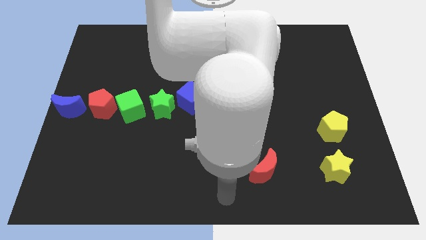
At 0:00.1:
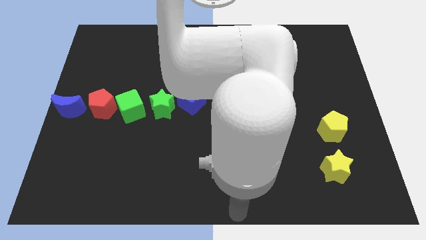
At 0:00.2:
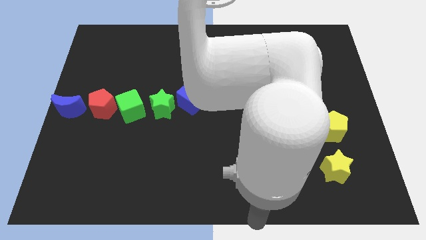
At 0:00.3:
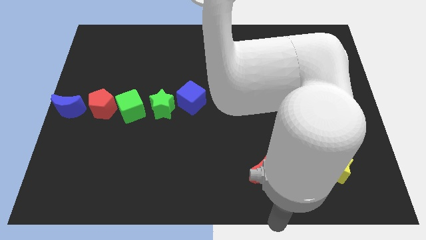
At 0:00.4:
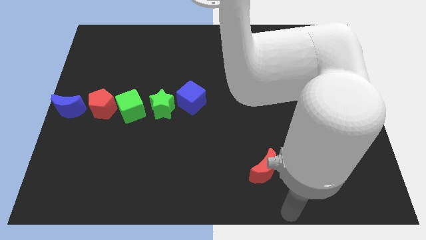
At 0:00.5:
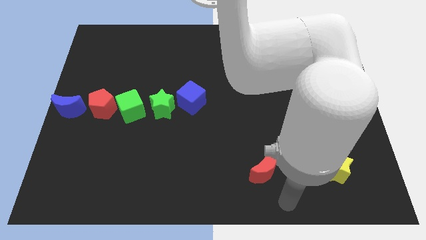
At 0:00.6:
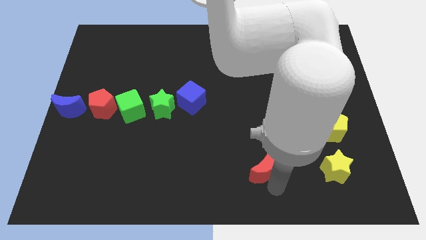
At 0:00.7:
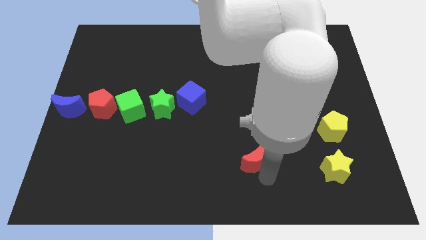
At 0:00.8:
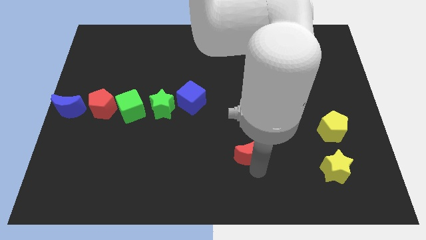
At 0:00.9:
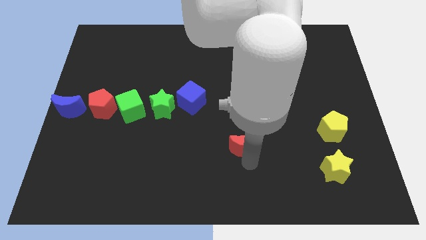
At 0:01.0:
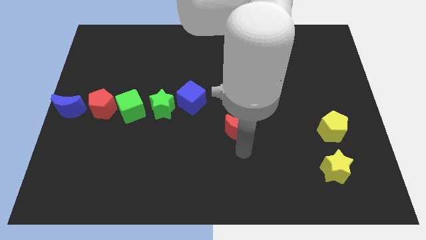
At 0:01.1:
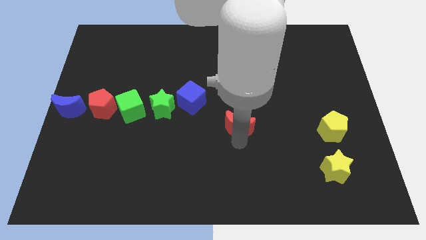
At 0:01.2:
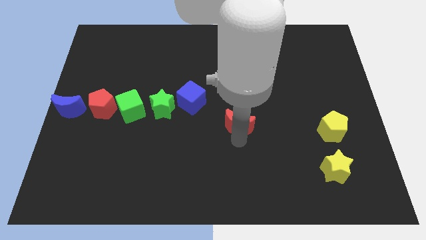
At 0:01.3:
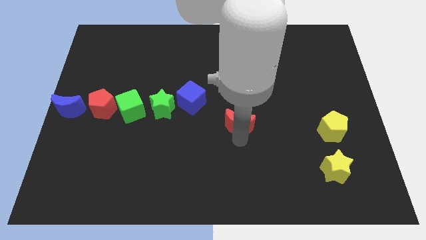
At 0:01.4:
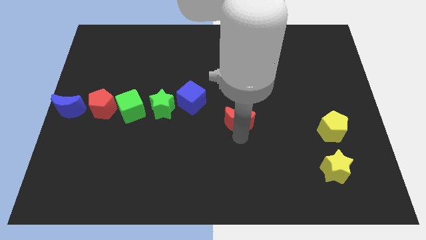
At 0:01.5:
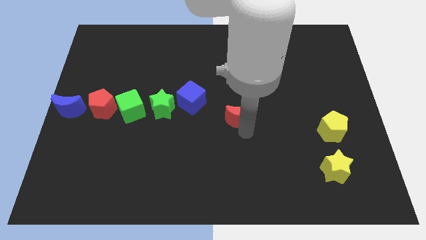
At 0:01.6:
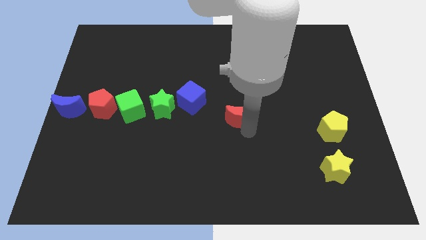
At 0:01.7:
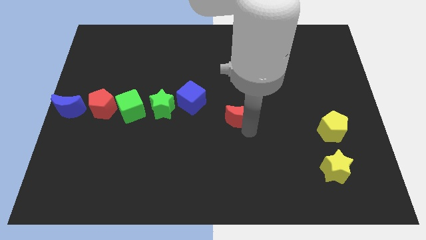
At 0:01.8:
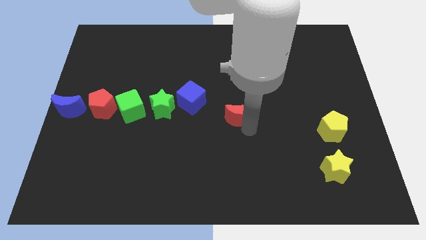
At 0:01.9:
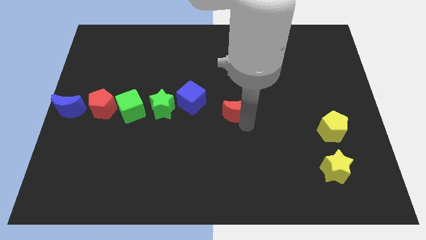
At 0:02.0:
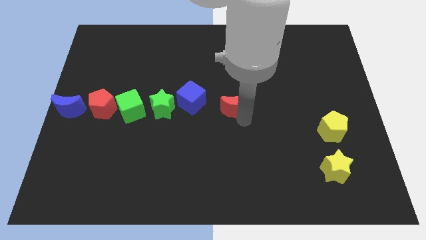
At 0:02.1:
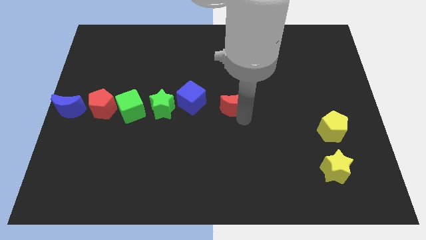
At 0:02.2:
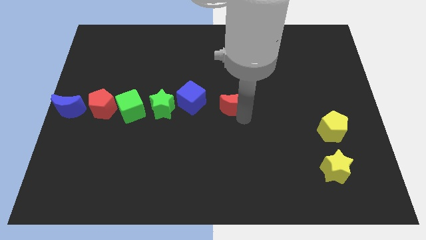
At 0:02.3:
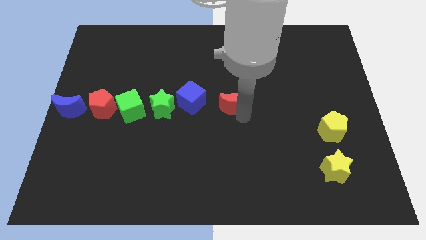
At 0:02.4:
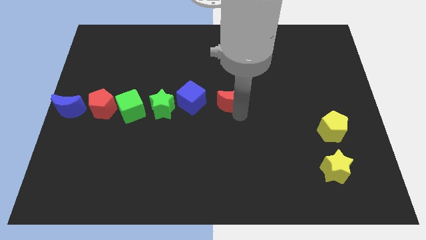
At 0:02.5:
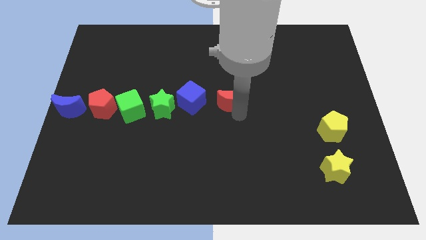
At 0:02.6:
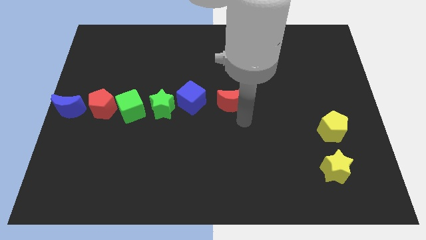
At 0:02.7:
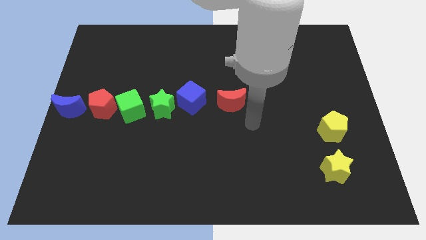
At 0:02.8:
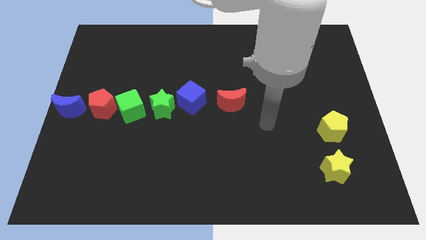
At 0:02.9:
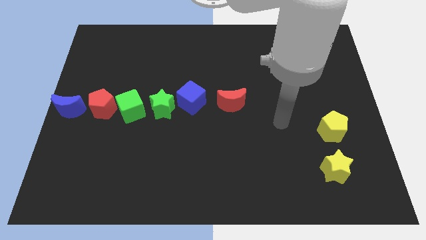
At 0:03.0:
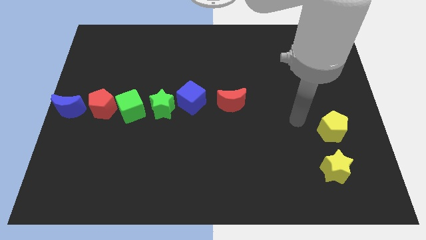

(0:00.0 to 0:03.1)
push the red moon at the center of the board

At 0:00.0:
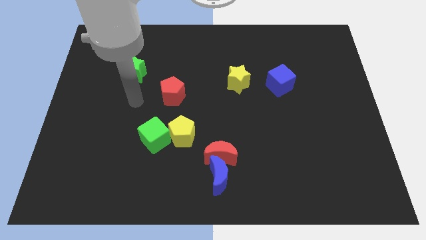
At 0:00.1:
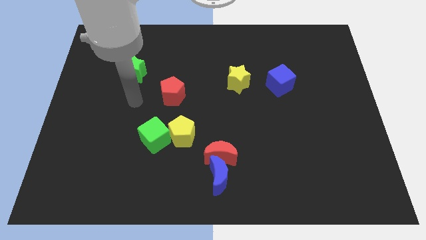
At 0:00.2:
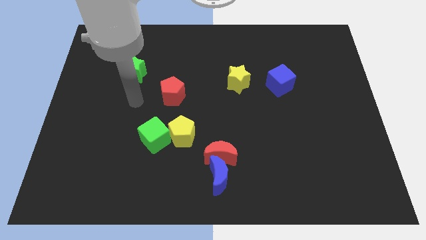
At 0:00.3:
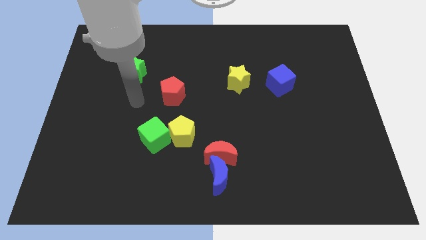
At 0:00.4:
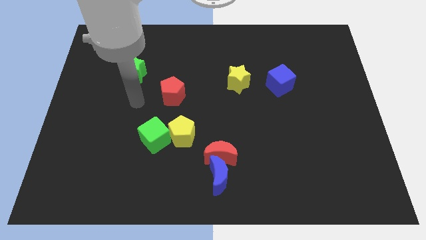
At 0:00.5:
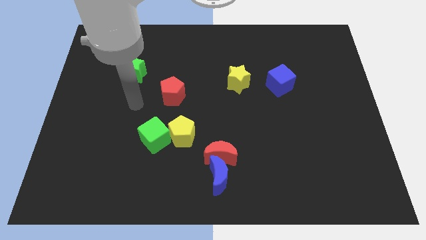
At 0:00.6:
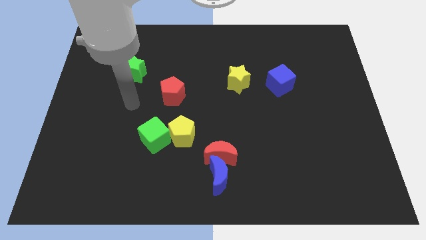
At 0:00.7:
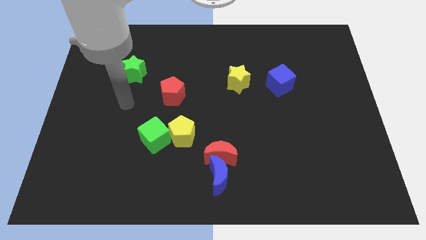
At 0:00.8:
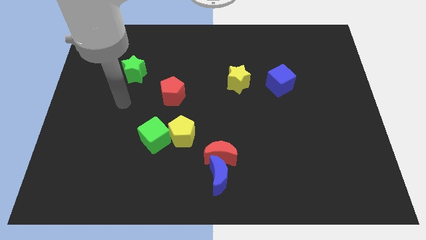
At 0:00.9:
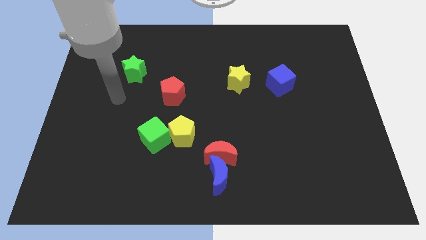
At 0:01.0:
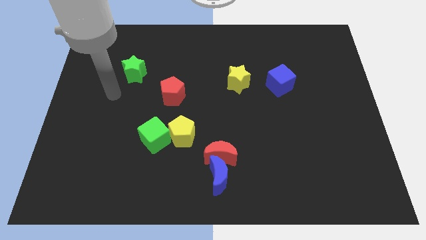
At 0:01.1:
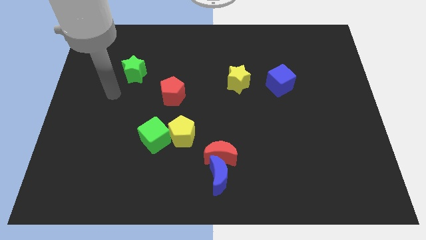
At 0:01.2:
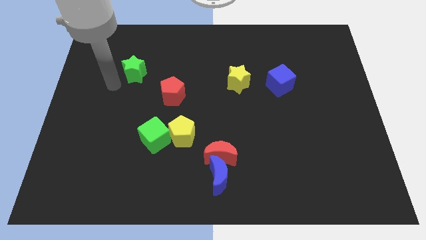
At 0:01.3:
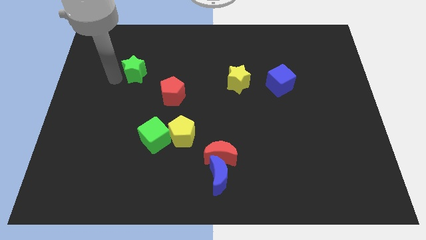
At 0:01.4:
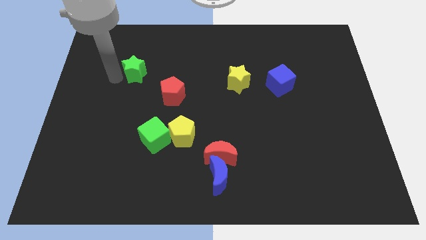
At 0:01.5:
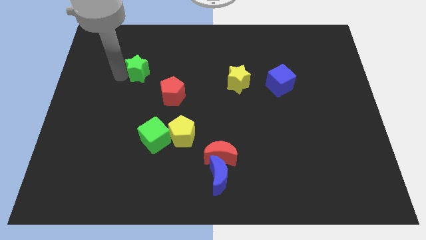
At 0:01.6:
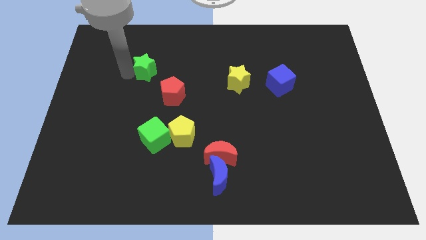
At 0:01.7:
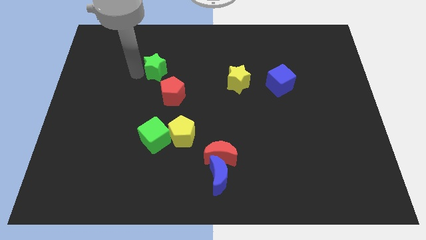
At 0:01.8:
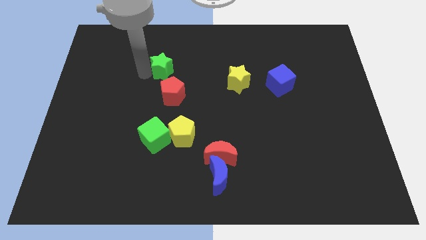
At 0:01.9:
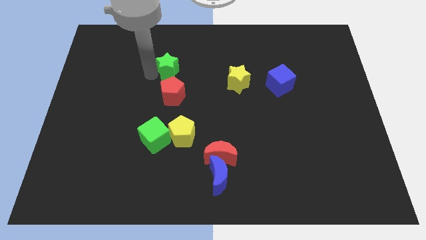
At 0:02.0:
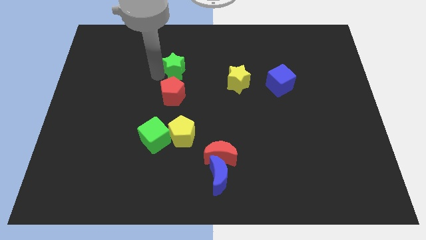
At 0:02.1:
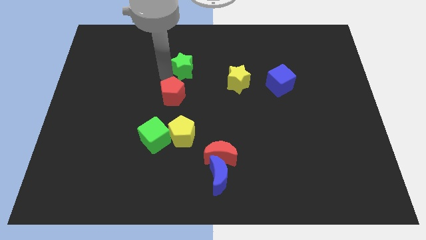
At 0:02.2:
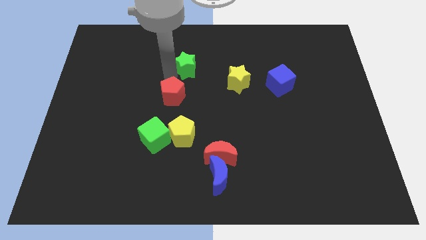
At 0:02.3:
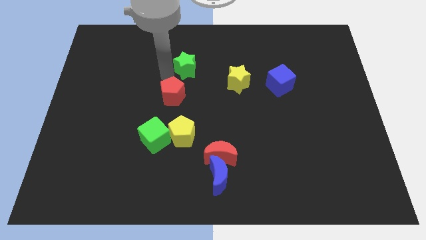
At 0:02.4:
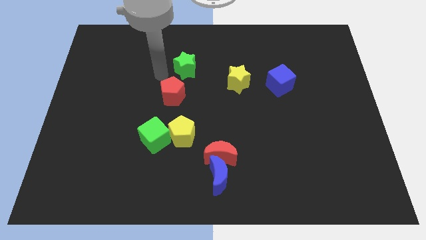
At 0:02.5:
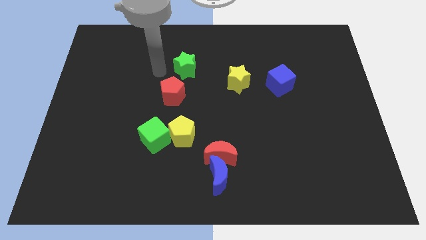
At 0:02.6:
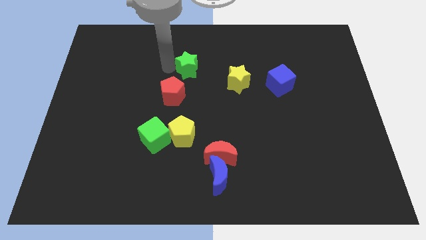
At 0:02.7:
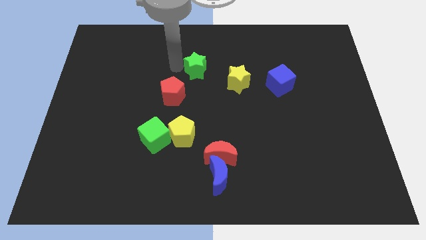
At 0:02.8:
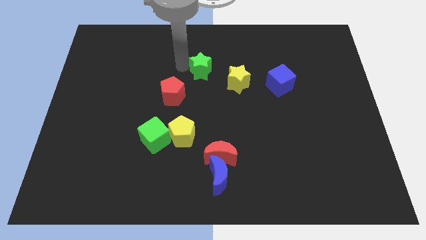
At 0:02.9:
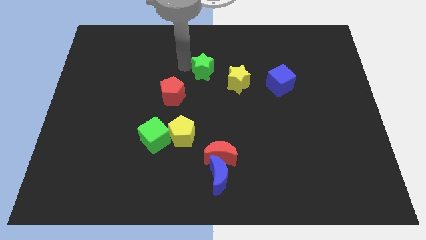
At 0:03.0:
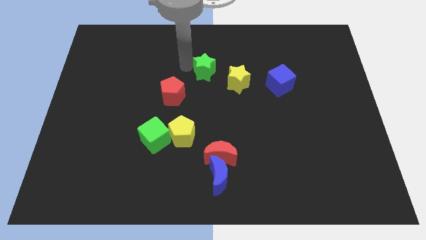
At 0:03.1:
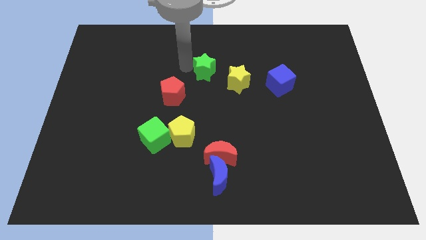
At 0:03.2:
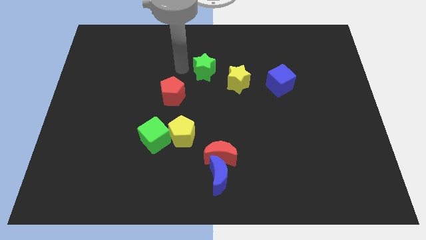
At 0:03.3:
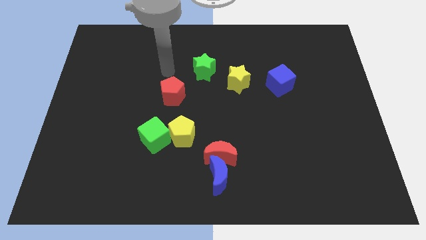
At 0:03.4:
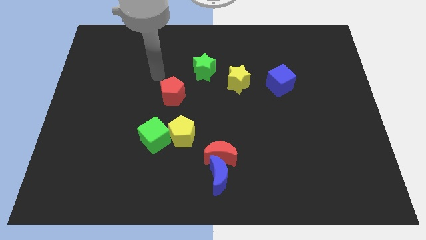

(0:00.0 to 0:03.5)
move the green star diagonal to top right to the red pentagon

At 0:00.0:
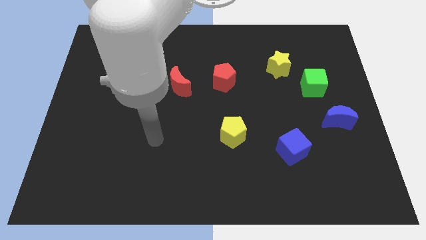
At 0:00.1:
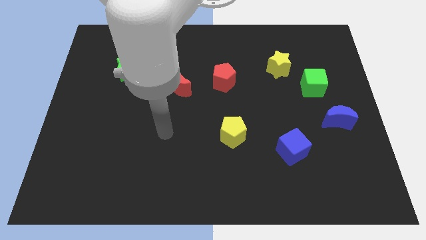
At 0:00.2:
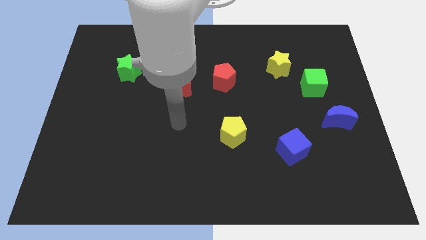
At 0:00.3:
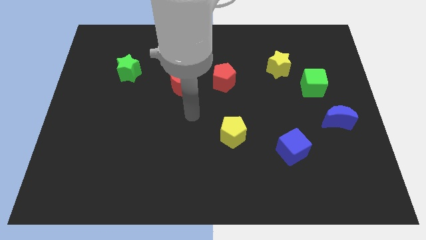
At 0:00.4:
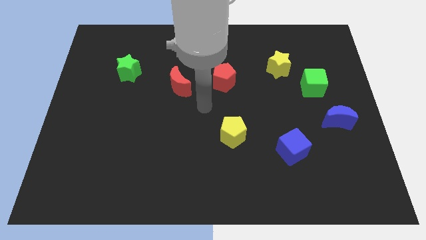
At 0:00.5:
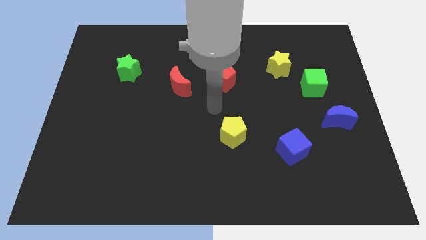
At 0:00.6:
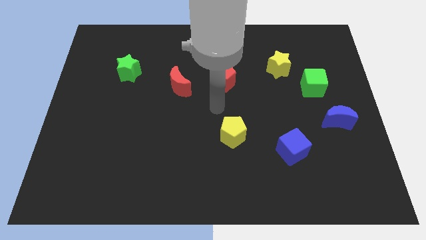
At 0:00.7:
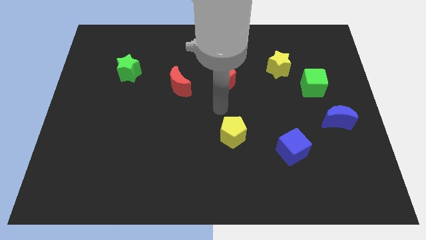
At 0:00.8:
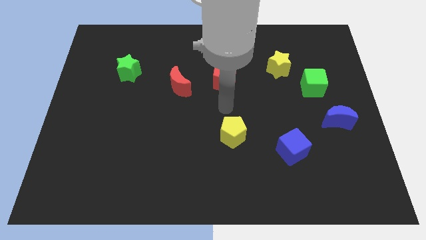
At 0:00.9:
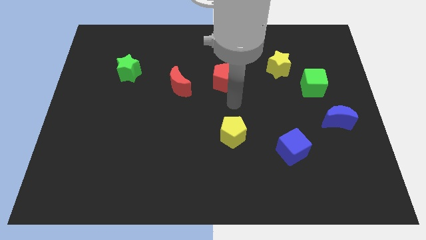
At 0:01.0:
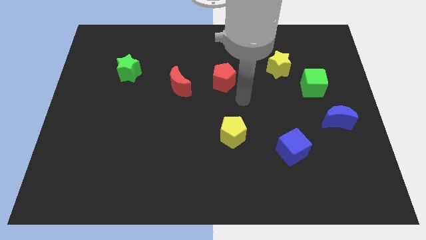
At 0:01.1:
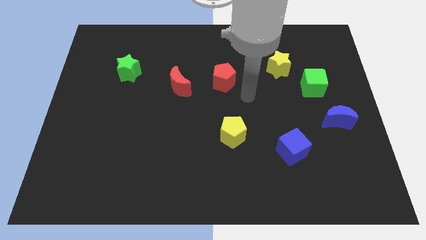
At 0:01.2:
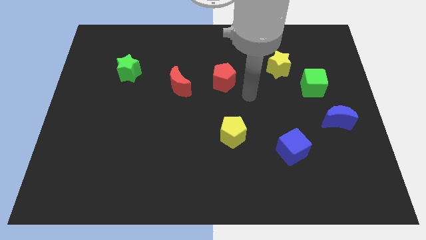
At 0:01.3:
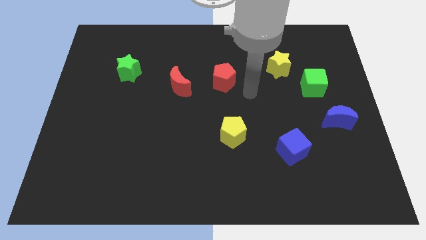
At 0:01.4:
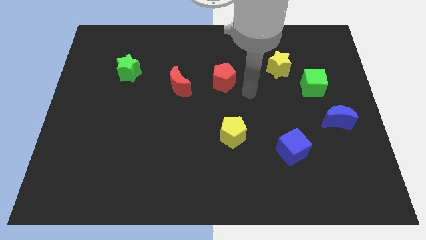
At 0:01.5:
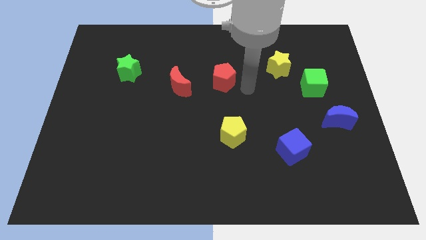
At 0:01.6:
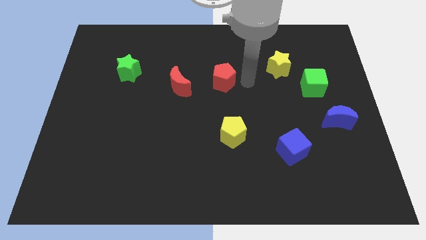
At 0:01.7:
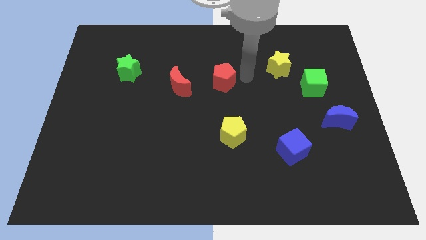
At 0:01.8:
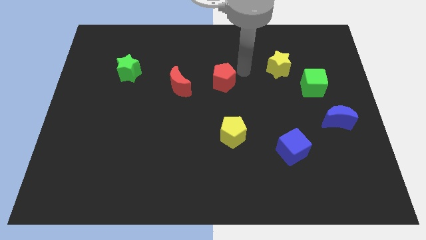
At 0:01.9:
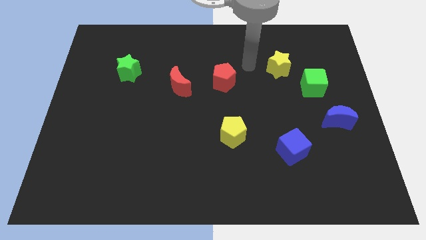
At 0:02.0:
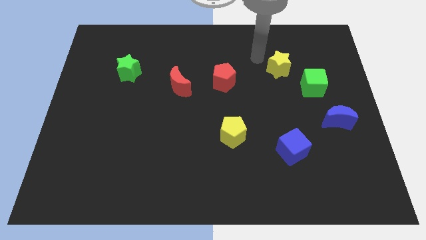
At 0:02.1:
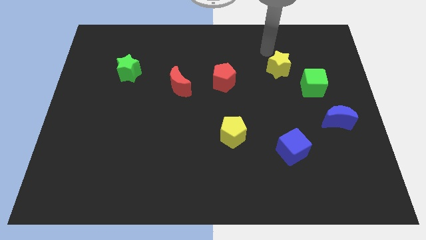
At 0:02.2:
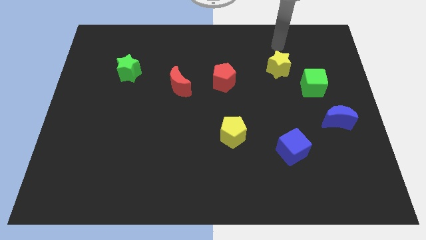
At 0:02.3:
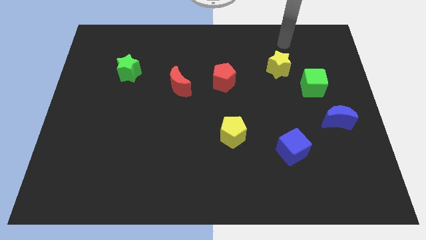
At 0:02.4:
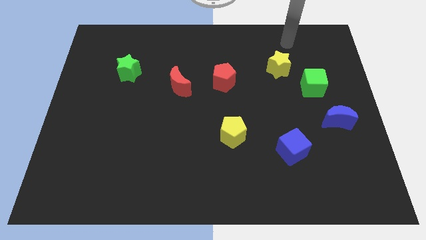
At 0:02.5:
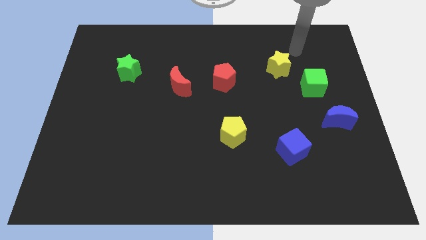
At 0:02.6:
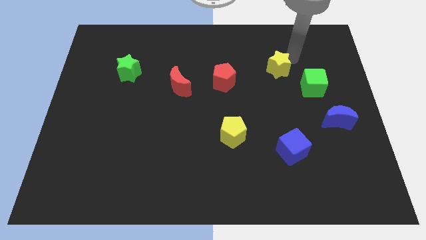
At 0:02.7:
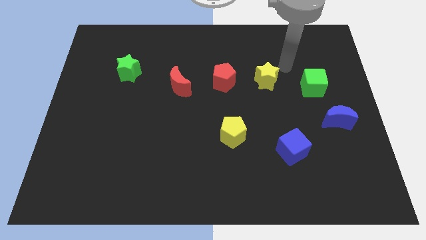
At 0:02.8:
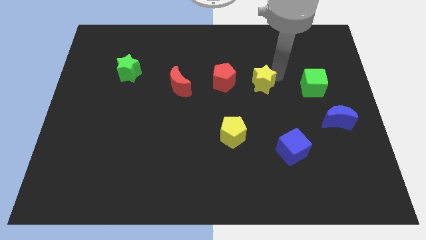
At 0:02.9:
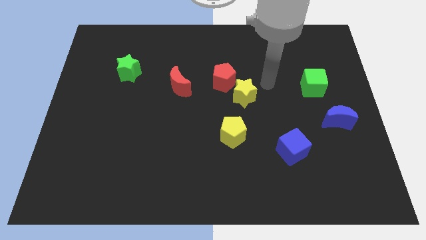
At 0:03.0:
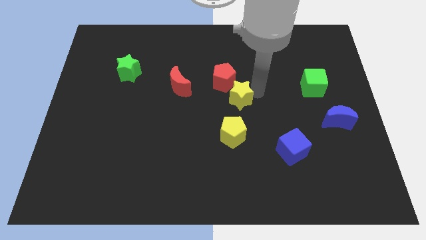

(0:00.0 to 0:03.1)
push the yellow star to the bottom right of the red pentagon
